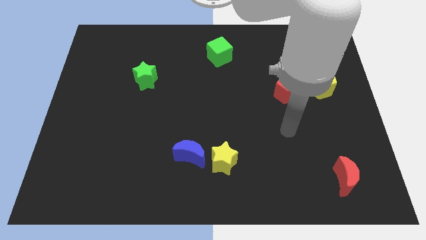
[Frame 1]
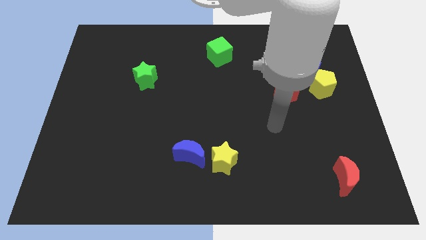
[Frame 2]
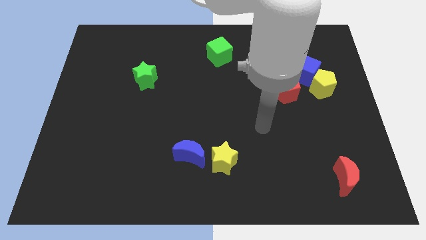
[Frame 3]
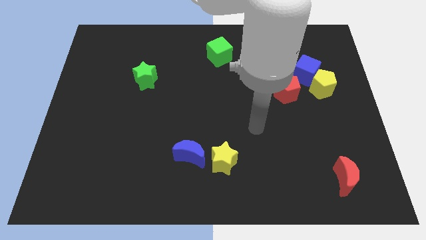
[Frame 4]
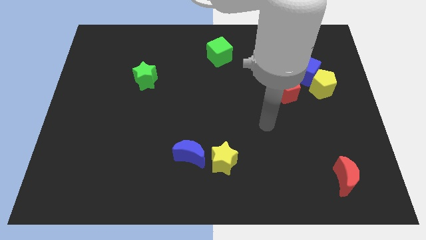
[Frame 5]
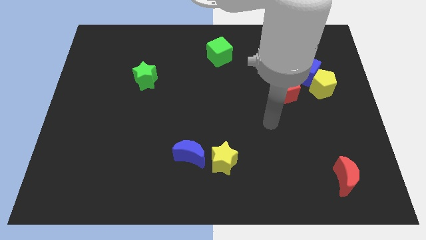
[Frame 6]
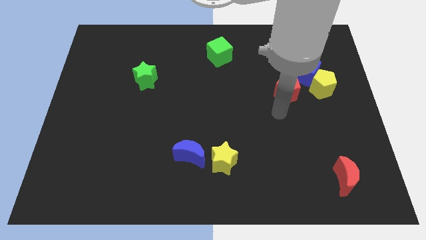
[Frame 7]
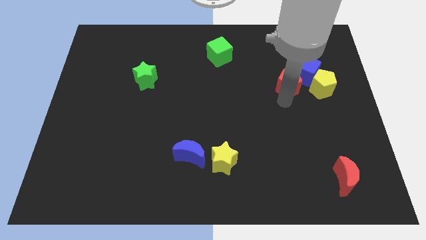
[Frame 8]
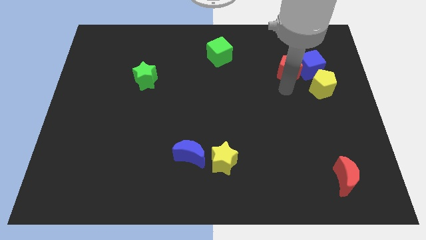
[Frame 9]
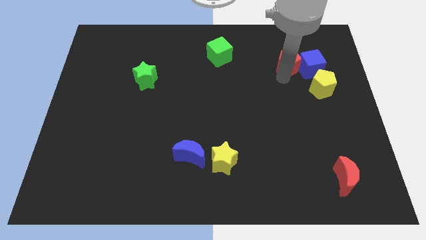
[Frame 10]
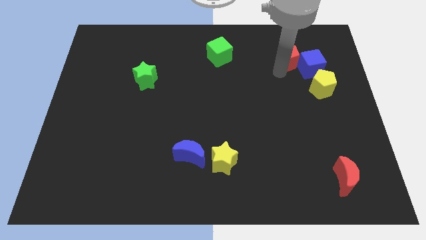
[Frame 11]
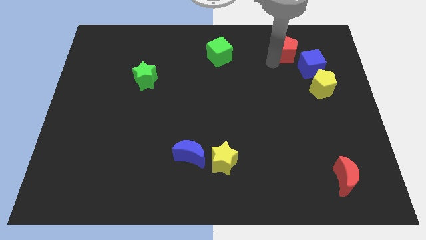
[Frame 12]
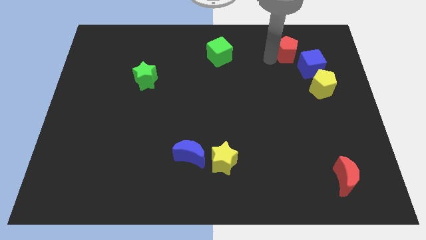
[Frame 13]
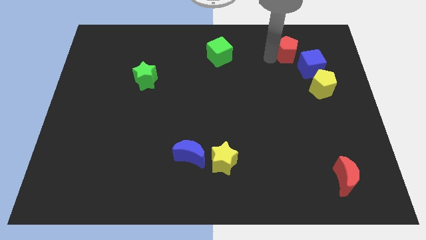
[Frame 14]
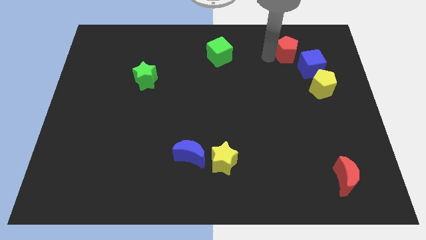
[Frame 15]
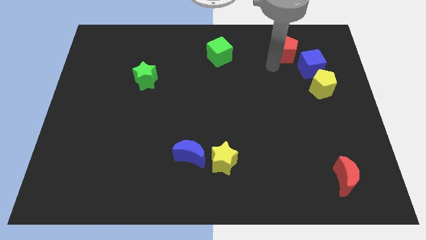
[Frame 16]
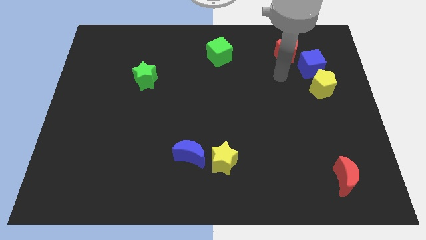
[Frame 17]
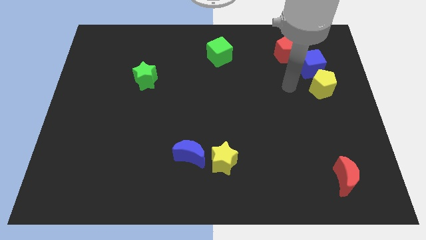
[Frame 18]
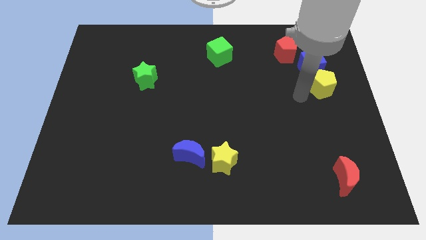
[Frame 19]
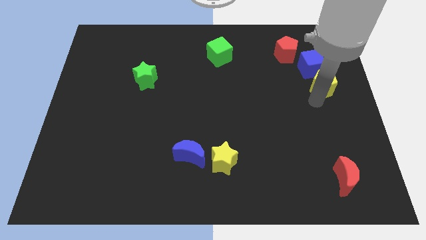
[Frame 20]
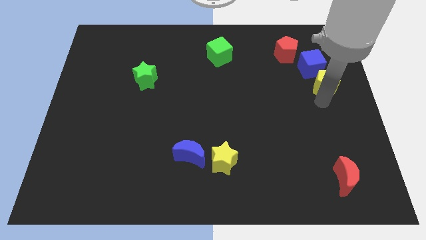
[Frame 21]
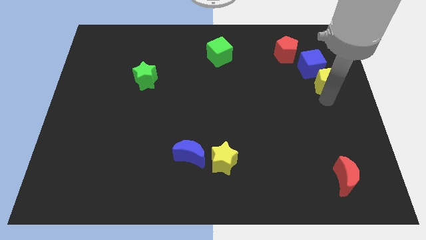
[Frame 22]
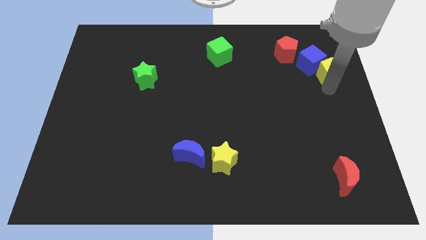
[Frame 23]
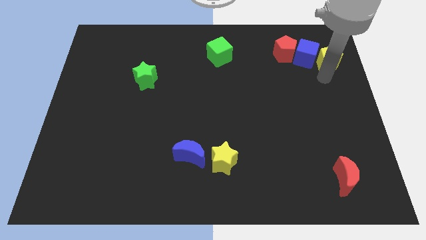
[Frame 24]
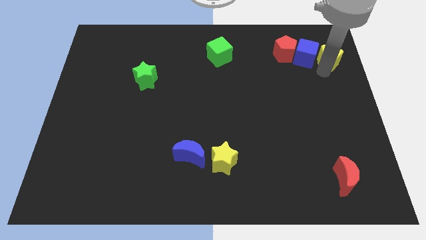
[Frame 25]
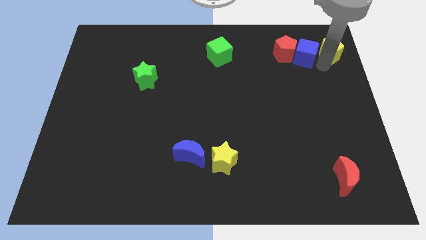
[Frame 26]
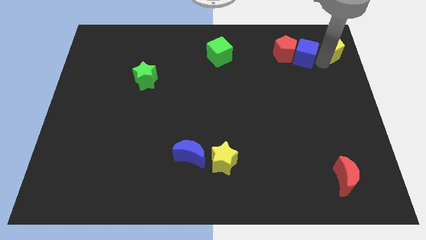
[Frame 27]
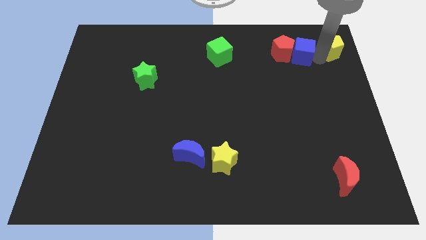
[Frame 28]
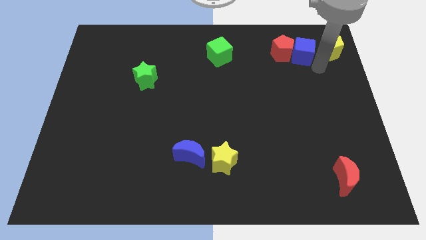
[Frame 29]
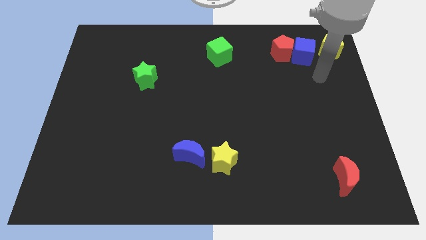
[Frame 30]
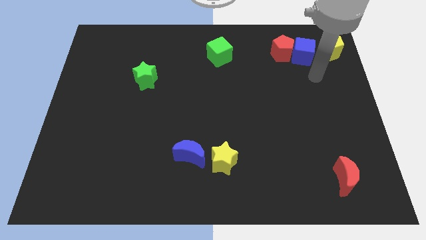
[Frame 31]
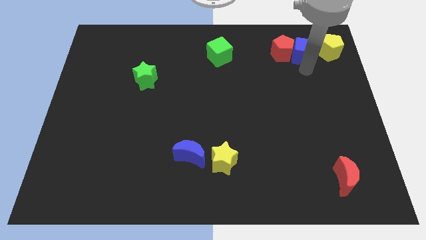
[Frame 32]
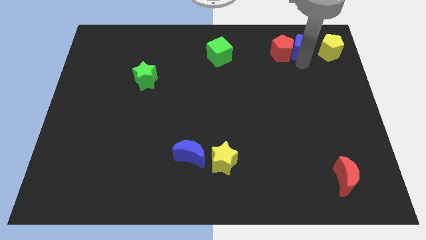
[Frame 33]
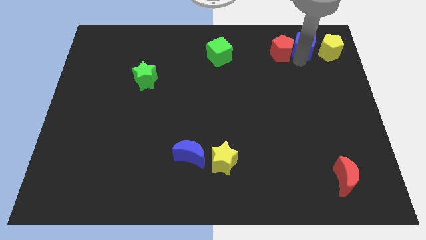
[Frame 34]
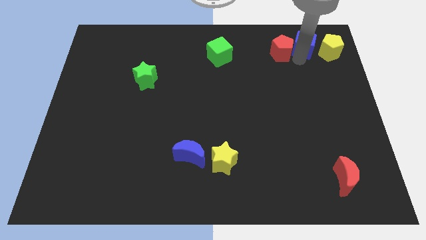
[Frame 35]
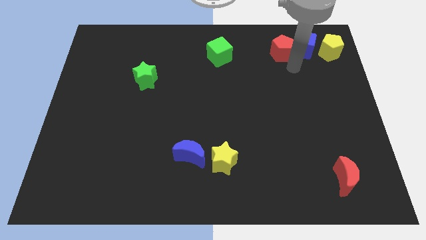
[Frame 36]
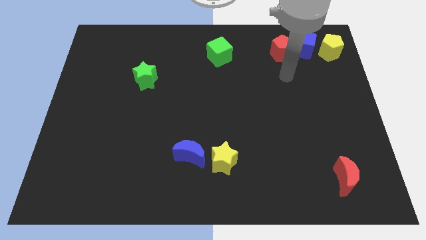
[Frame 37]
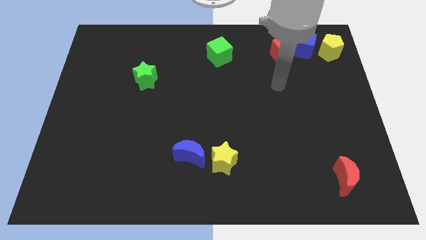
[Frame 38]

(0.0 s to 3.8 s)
move the yellow pentagon blue cube and the red pentagon to the top of the board

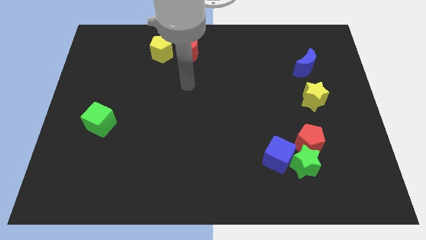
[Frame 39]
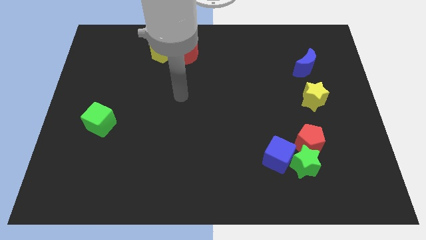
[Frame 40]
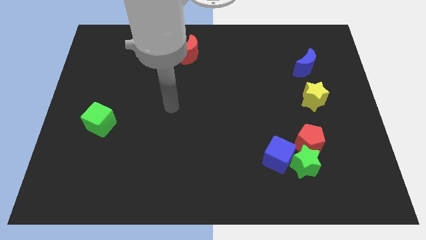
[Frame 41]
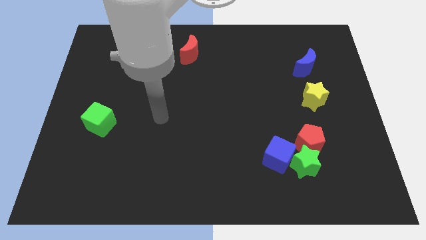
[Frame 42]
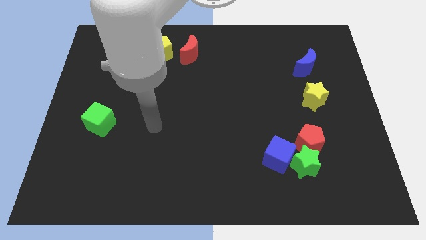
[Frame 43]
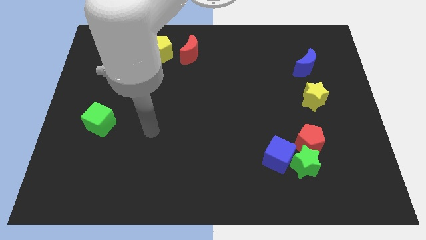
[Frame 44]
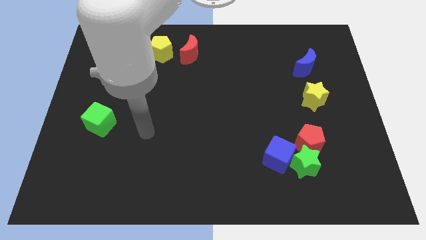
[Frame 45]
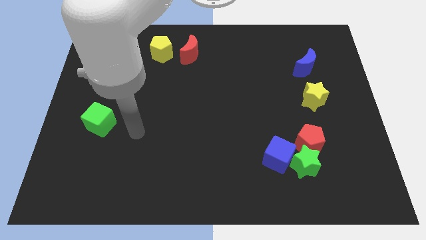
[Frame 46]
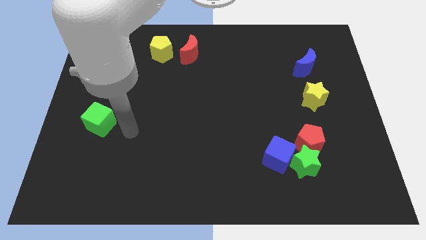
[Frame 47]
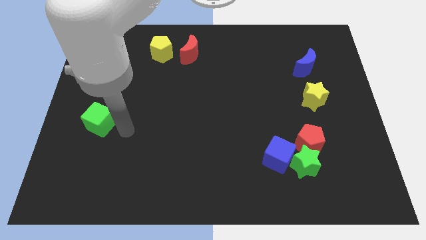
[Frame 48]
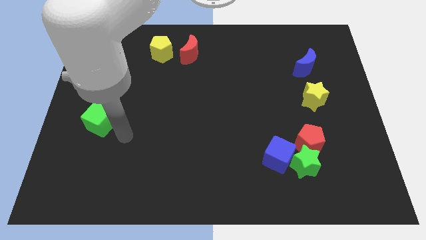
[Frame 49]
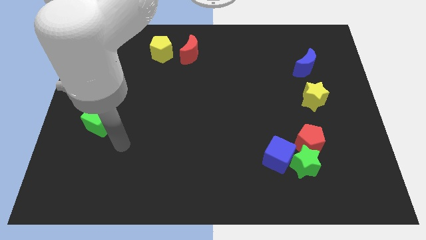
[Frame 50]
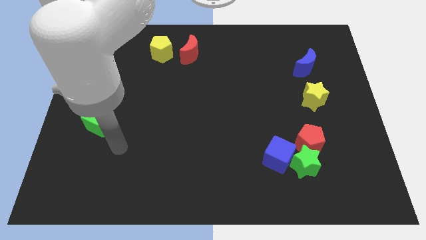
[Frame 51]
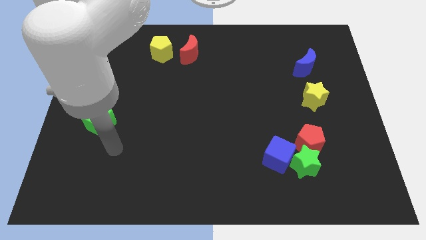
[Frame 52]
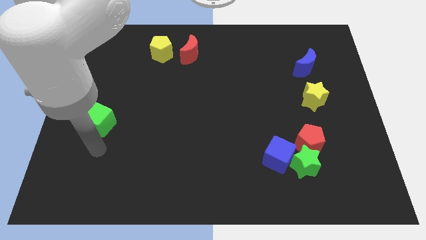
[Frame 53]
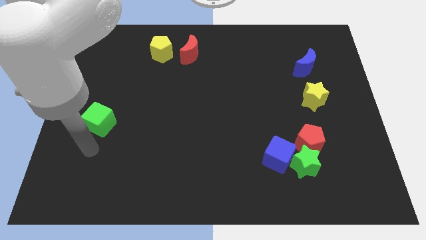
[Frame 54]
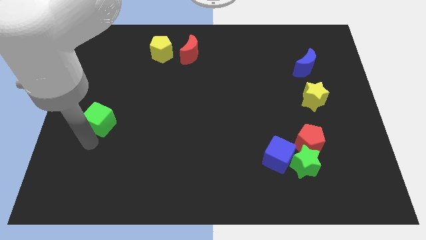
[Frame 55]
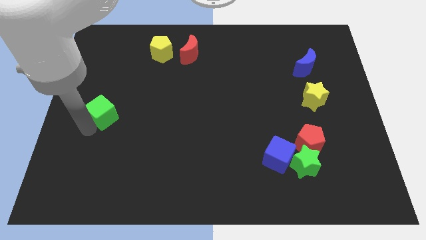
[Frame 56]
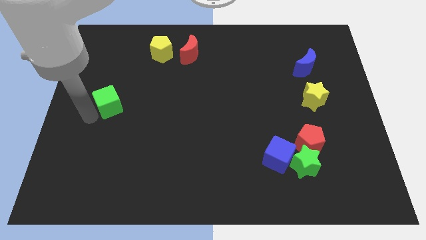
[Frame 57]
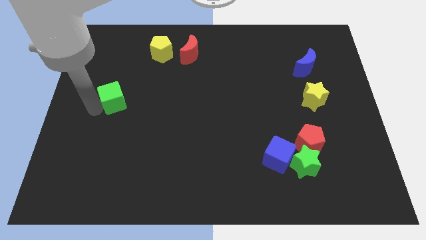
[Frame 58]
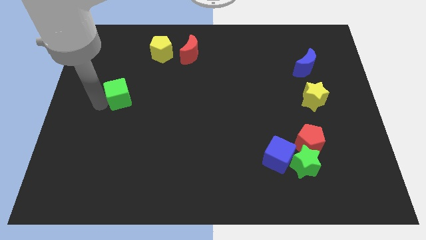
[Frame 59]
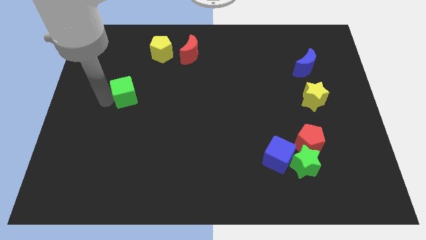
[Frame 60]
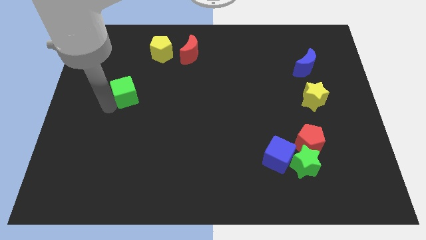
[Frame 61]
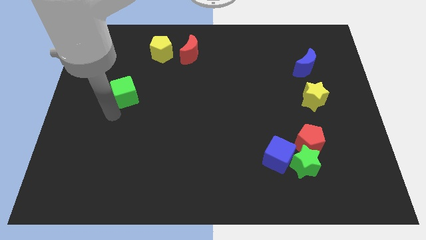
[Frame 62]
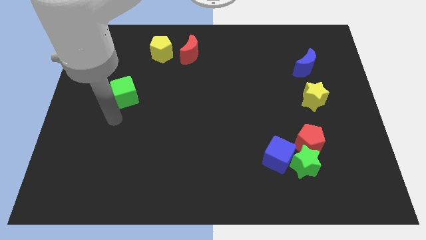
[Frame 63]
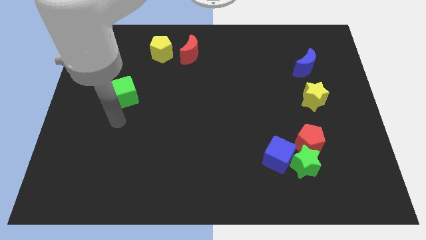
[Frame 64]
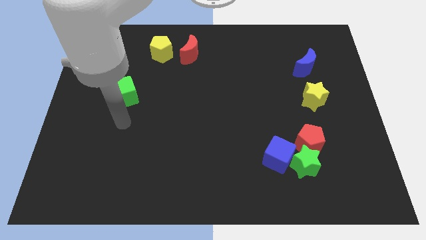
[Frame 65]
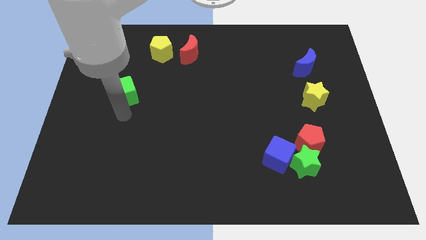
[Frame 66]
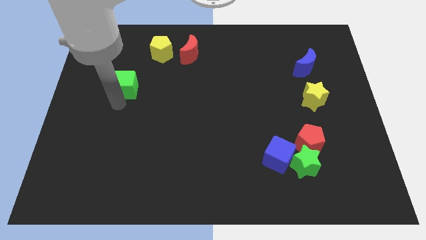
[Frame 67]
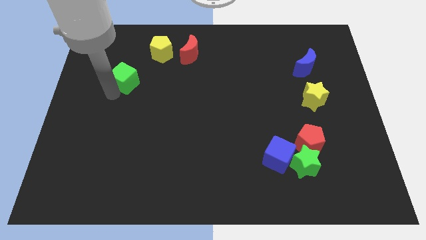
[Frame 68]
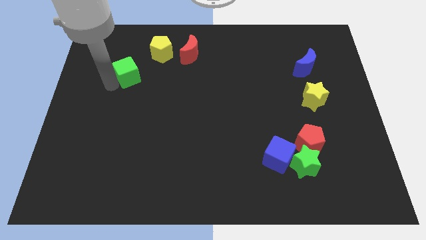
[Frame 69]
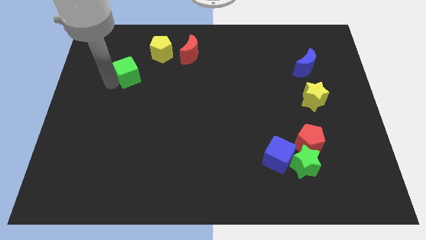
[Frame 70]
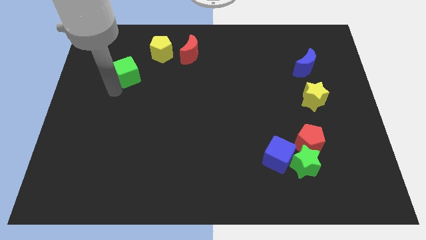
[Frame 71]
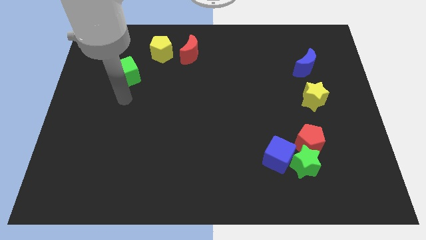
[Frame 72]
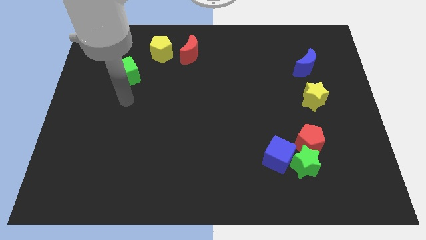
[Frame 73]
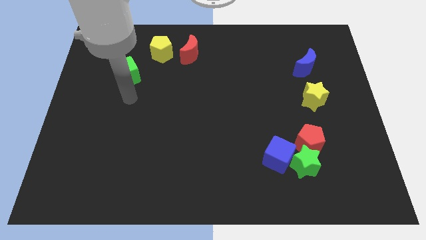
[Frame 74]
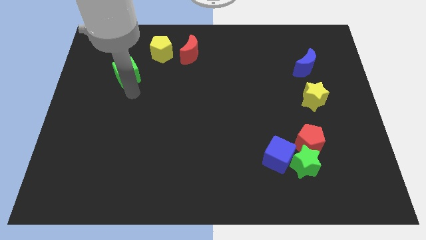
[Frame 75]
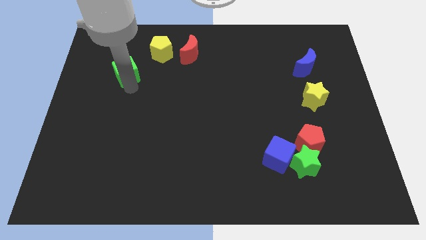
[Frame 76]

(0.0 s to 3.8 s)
move the green cube to the top of the board

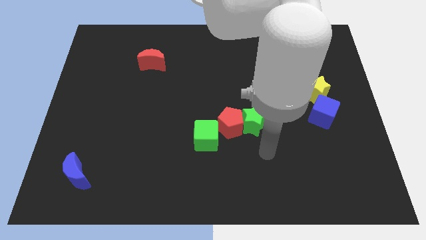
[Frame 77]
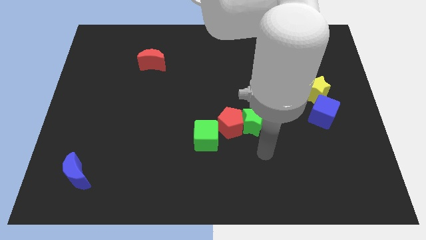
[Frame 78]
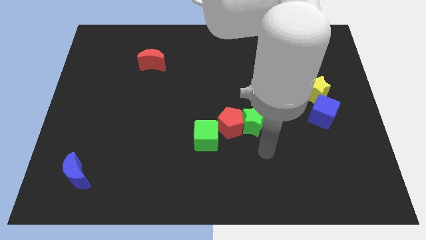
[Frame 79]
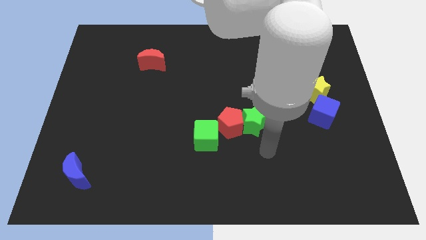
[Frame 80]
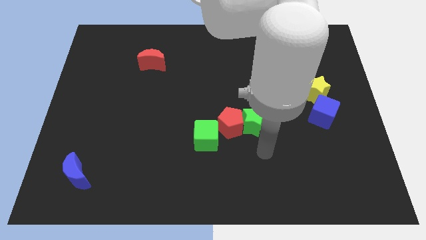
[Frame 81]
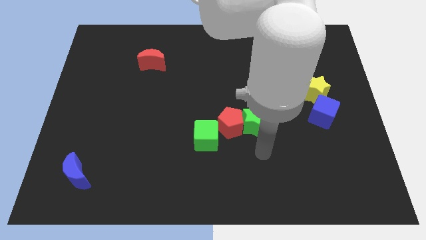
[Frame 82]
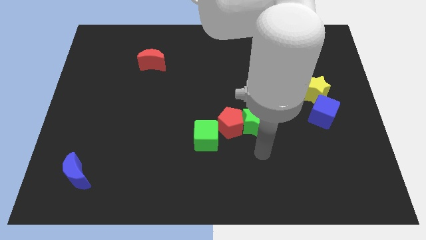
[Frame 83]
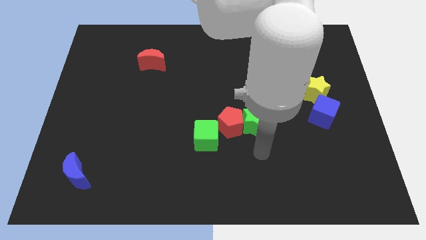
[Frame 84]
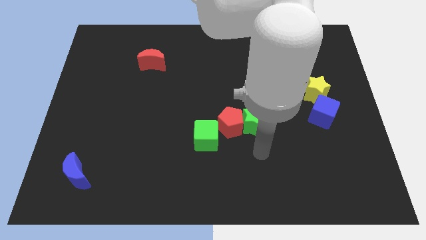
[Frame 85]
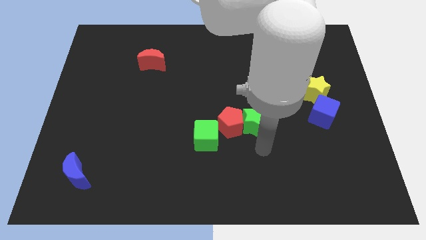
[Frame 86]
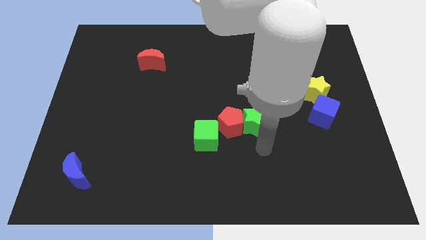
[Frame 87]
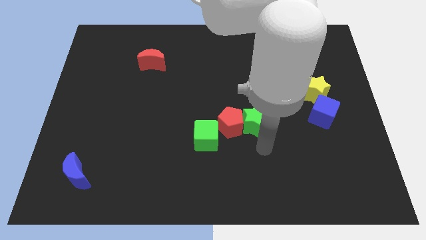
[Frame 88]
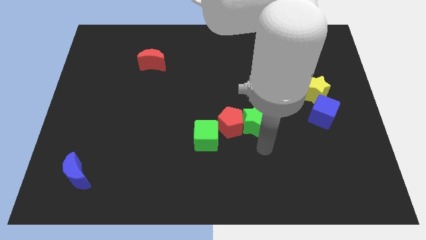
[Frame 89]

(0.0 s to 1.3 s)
point your arm at the bottom of green star
